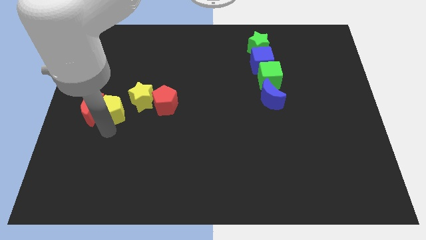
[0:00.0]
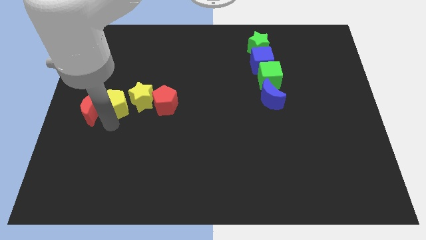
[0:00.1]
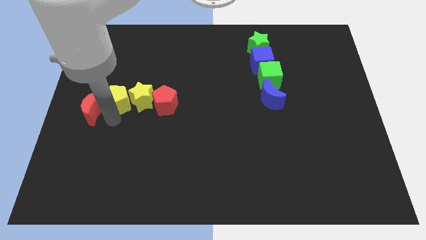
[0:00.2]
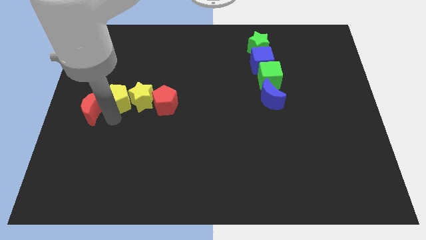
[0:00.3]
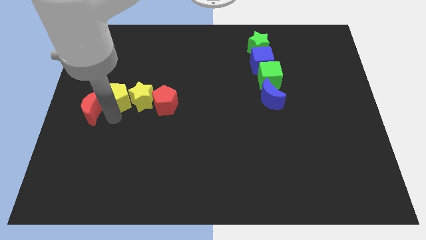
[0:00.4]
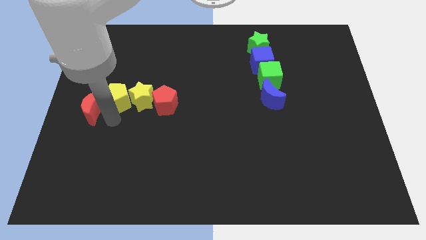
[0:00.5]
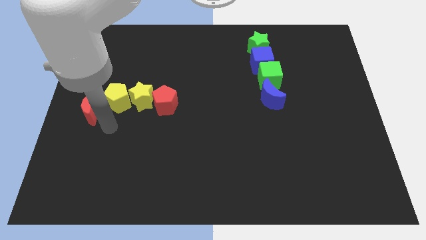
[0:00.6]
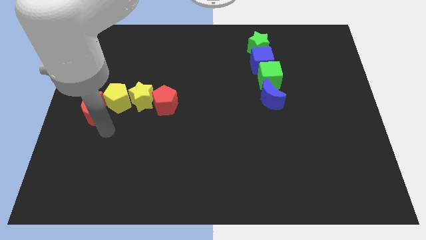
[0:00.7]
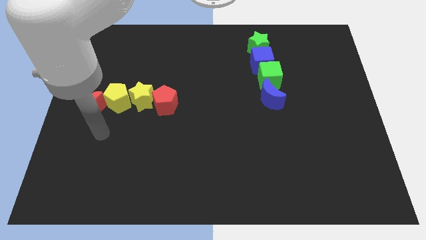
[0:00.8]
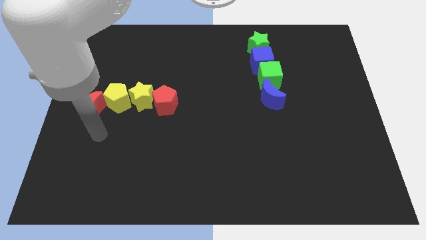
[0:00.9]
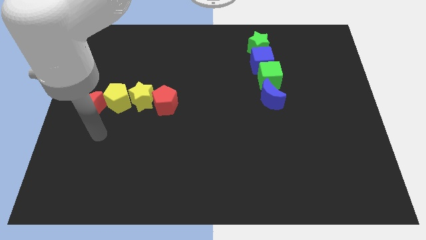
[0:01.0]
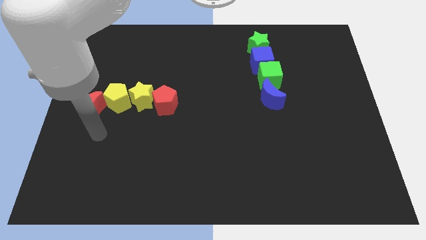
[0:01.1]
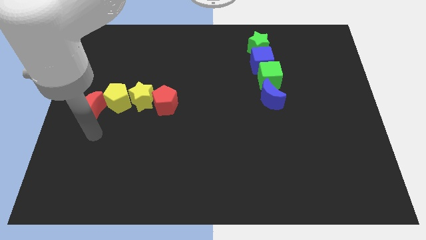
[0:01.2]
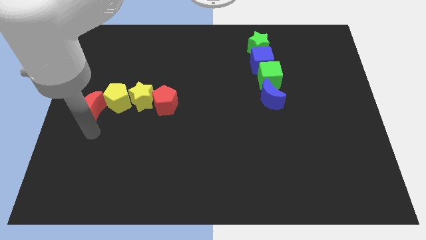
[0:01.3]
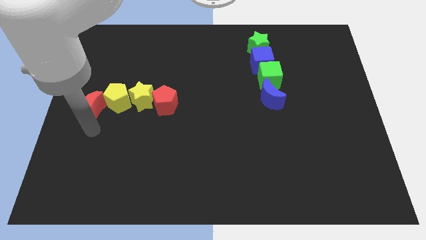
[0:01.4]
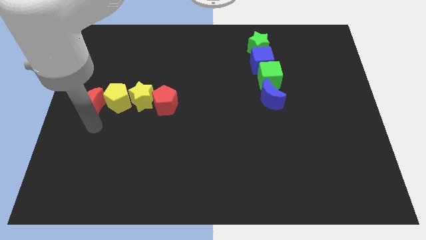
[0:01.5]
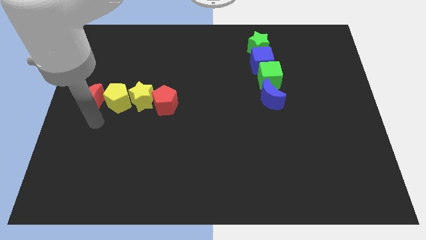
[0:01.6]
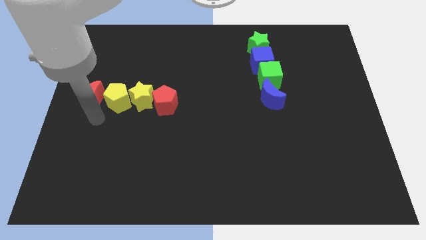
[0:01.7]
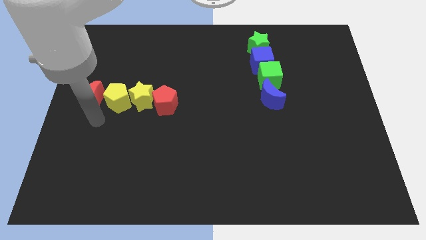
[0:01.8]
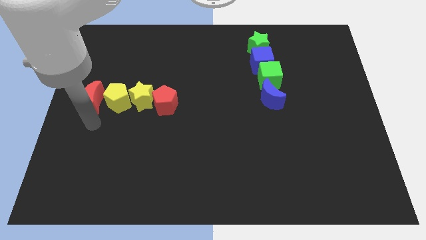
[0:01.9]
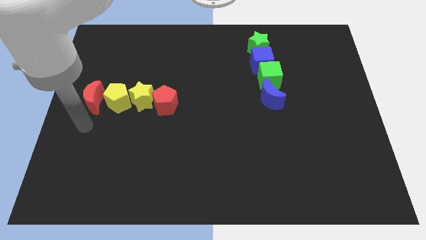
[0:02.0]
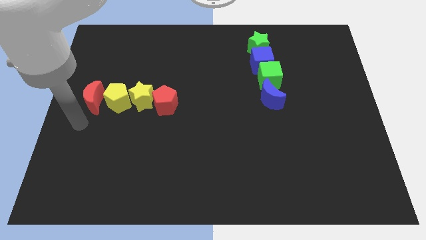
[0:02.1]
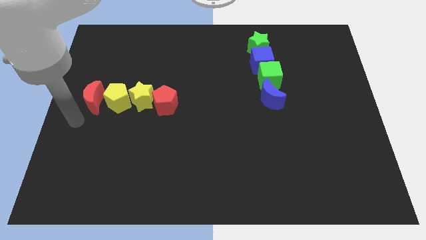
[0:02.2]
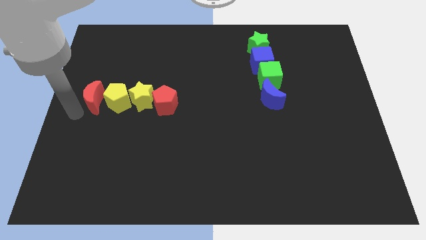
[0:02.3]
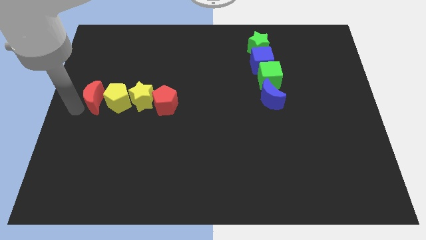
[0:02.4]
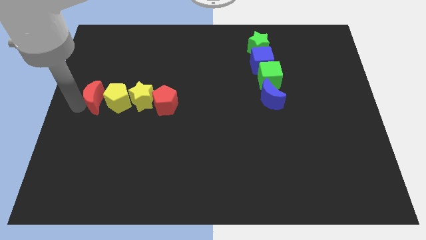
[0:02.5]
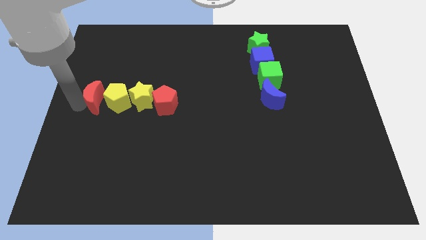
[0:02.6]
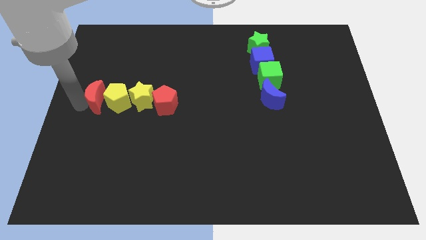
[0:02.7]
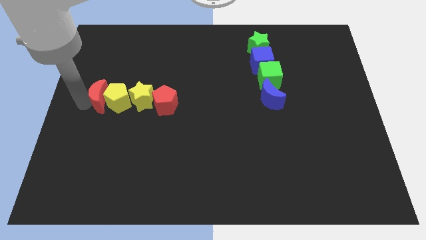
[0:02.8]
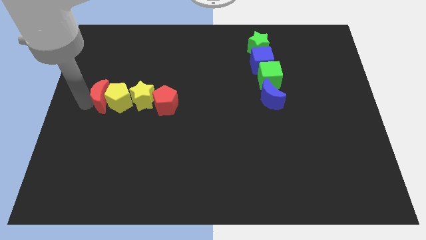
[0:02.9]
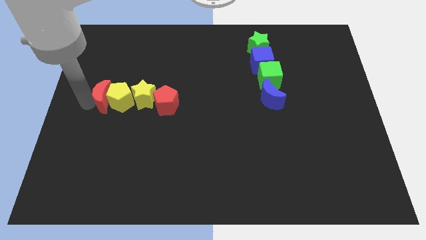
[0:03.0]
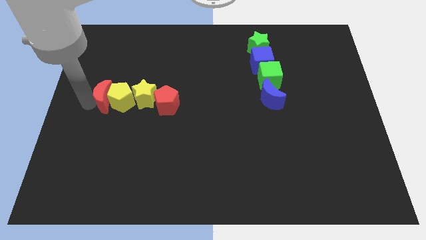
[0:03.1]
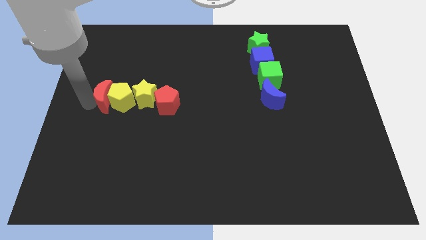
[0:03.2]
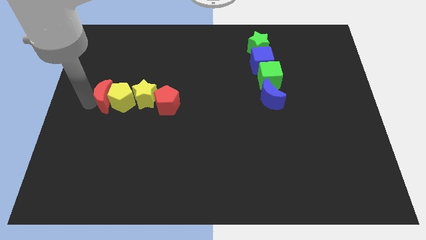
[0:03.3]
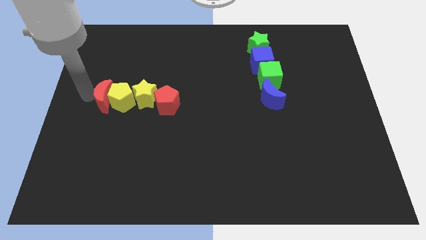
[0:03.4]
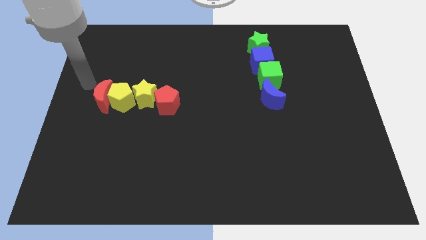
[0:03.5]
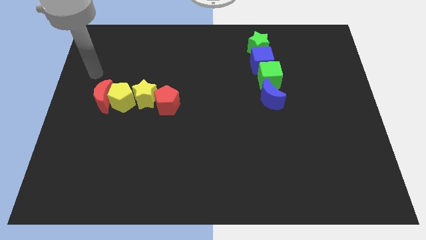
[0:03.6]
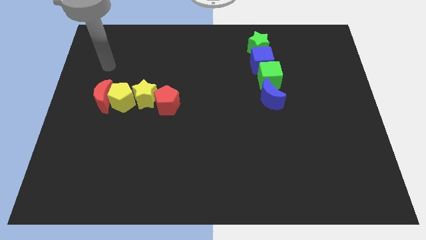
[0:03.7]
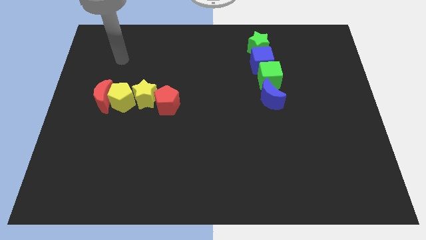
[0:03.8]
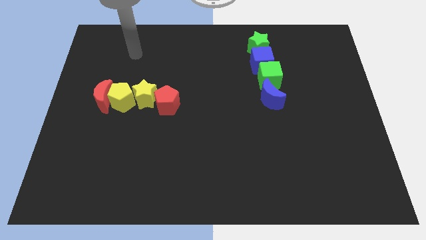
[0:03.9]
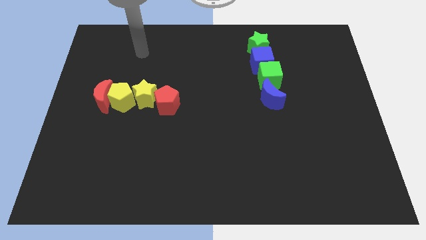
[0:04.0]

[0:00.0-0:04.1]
push the red crescent close to the yellow pentagon

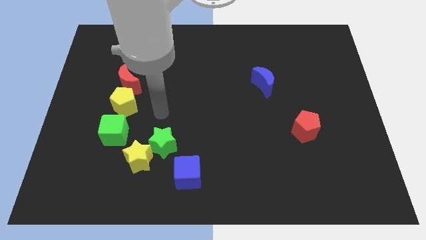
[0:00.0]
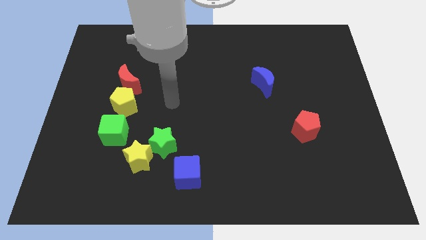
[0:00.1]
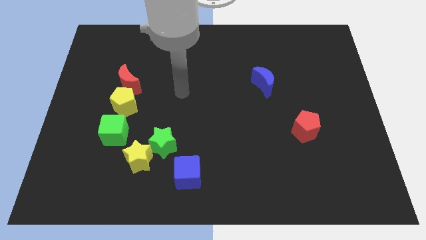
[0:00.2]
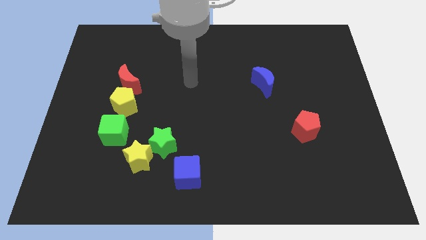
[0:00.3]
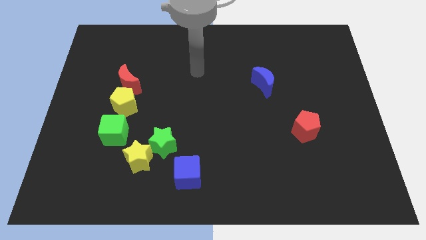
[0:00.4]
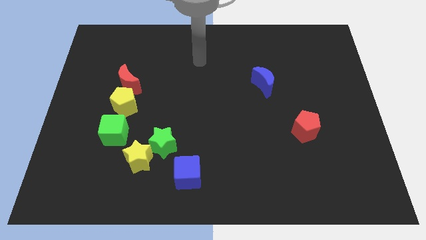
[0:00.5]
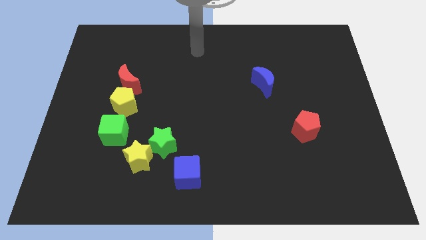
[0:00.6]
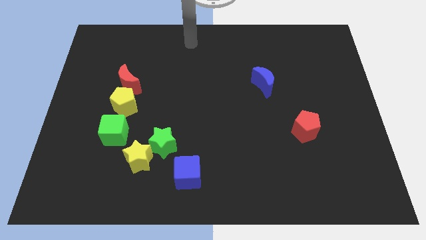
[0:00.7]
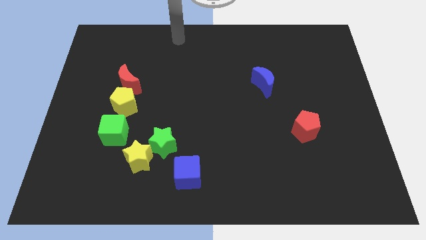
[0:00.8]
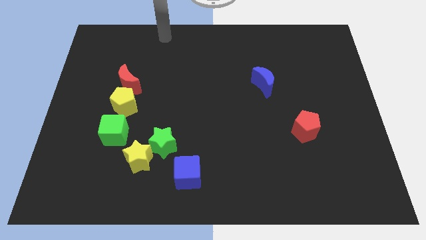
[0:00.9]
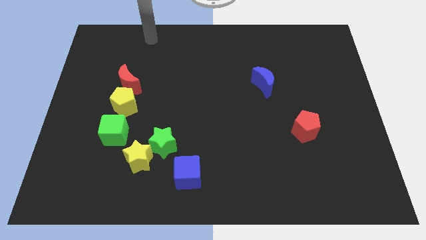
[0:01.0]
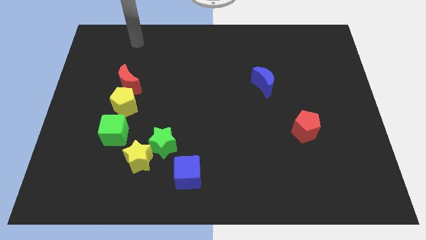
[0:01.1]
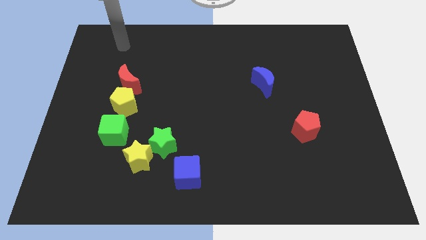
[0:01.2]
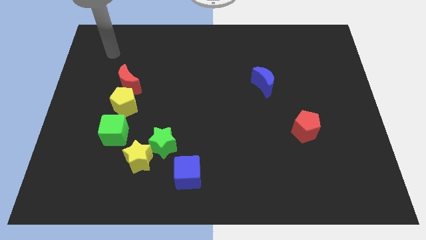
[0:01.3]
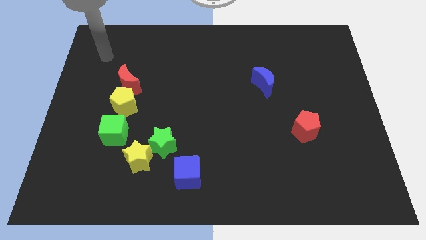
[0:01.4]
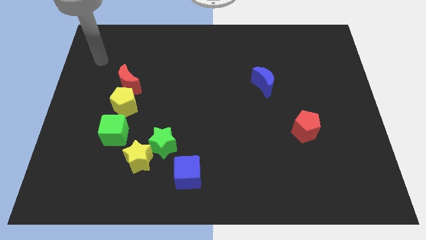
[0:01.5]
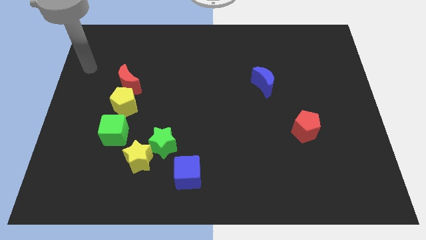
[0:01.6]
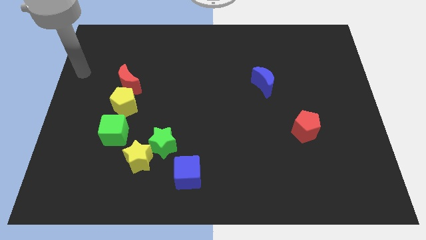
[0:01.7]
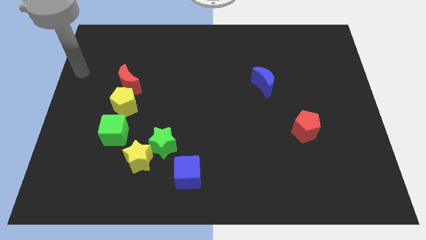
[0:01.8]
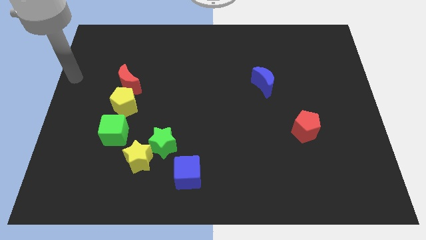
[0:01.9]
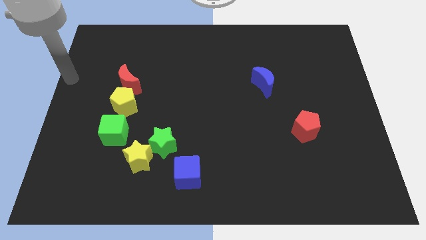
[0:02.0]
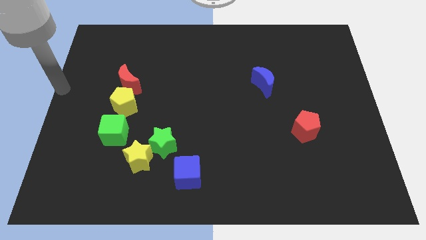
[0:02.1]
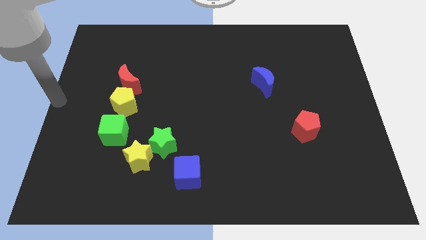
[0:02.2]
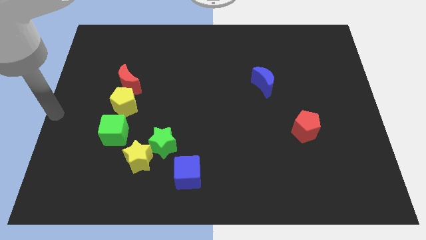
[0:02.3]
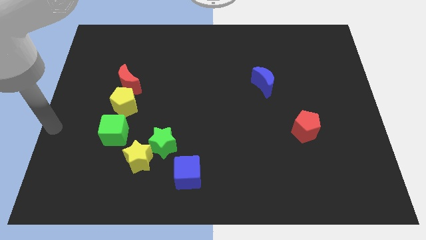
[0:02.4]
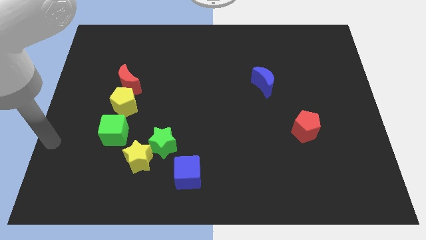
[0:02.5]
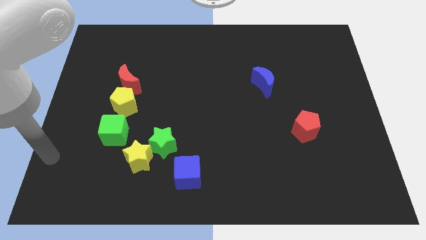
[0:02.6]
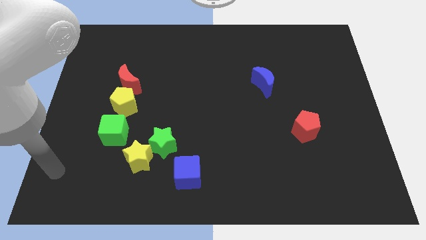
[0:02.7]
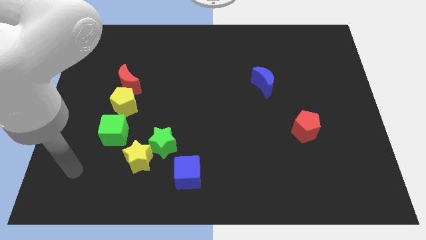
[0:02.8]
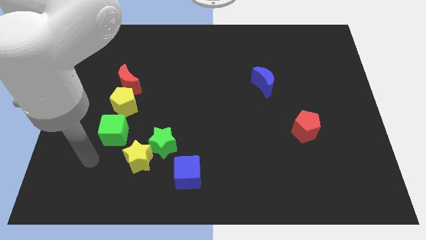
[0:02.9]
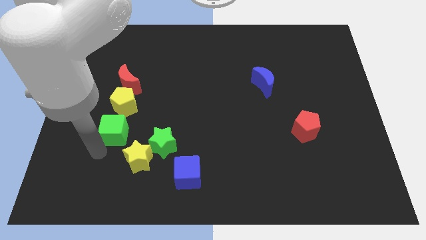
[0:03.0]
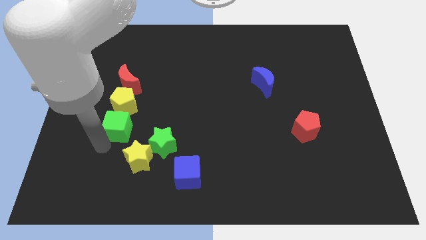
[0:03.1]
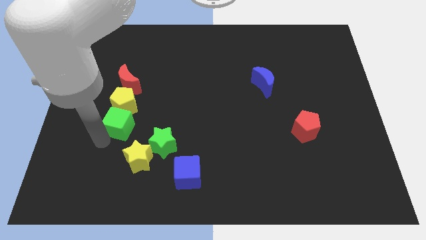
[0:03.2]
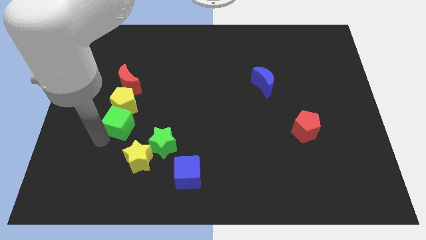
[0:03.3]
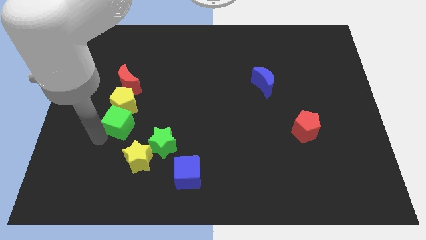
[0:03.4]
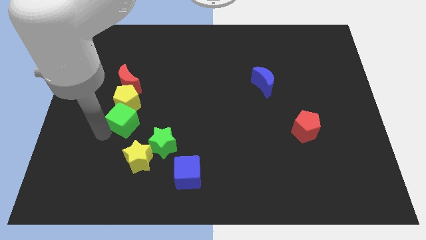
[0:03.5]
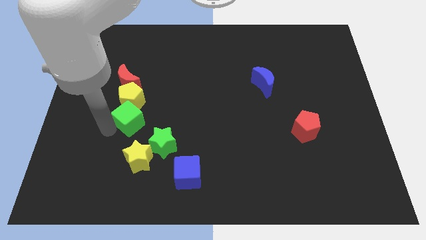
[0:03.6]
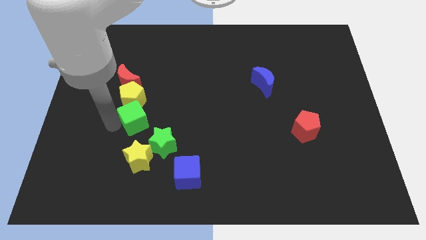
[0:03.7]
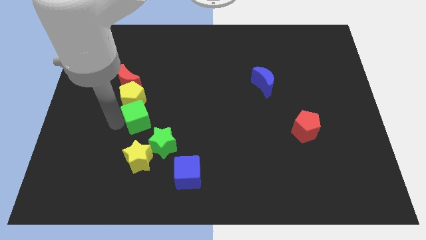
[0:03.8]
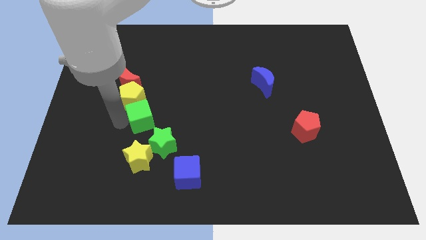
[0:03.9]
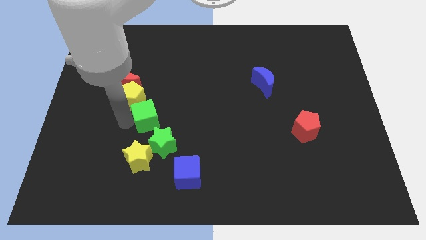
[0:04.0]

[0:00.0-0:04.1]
place the green cube diagonally in between the yellow pentagon and green star

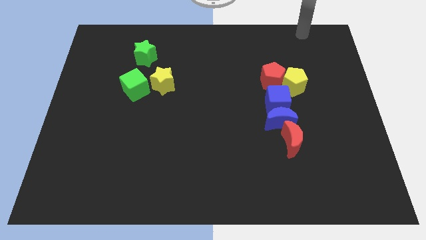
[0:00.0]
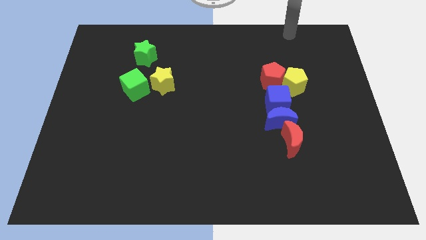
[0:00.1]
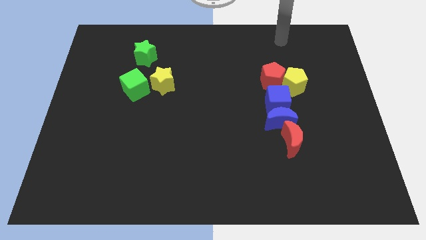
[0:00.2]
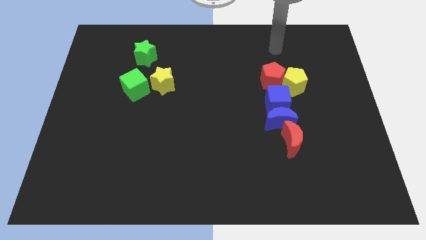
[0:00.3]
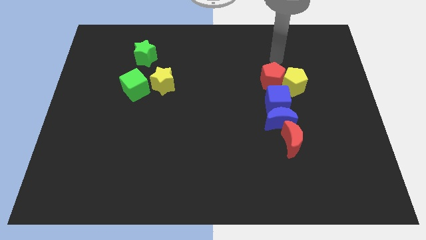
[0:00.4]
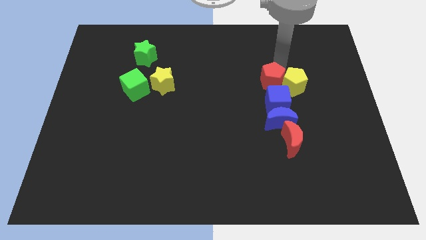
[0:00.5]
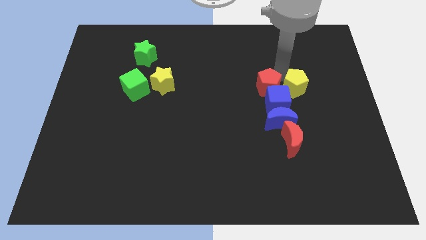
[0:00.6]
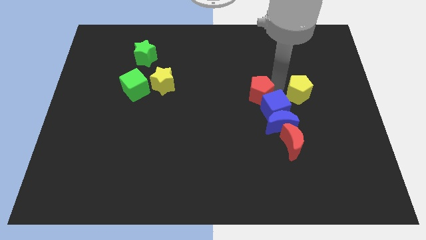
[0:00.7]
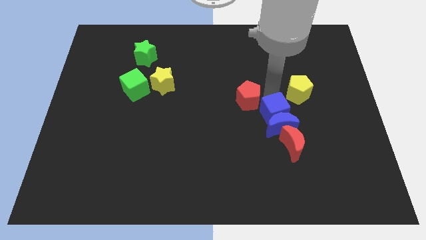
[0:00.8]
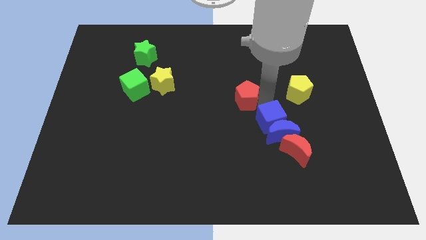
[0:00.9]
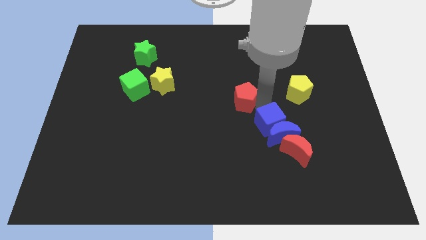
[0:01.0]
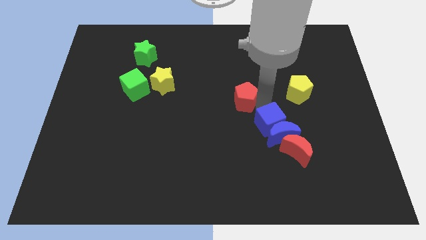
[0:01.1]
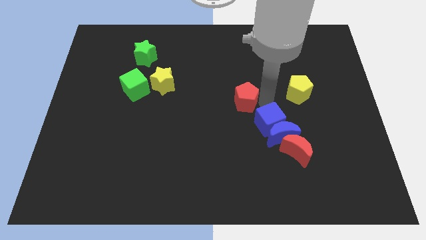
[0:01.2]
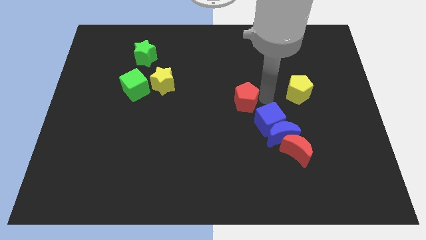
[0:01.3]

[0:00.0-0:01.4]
push group of objects slightly to the bottom of the board
